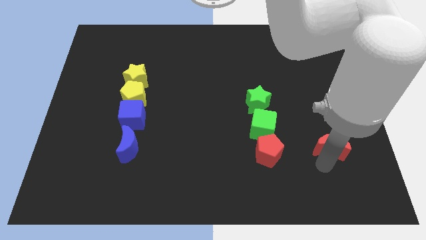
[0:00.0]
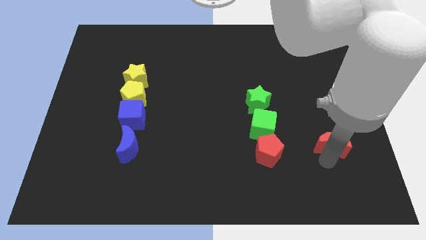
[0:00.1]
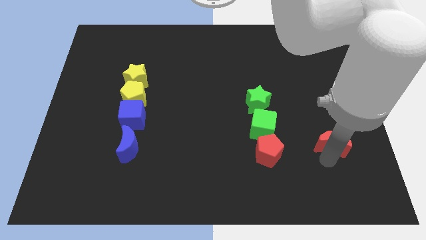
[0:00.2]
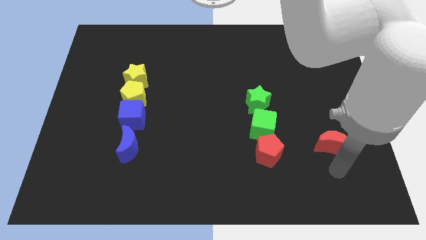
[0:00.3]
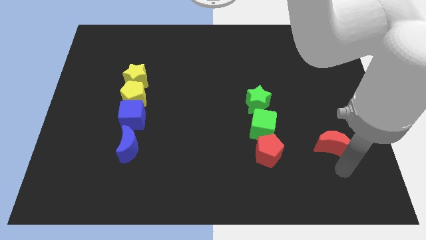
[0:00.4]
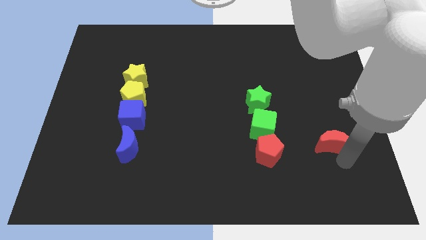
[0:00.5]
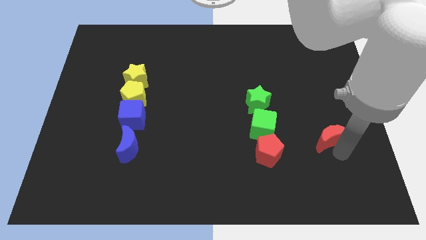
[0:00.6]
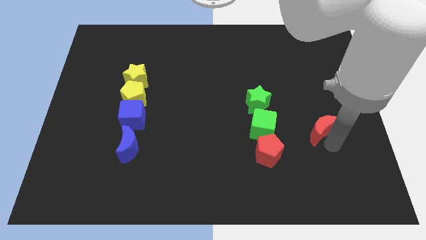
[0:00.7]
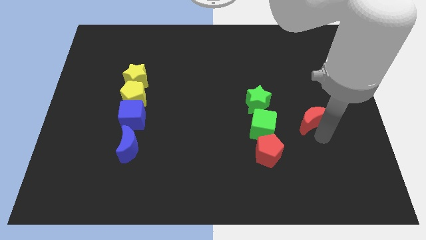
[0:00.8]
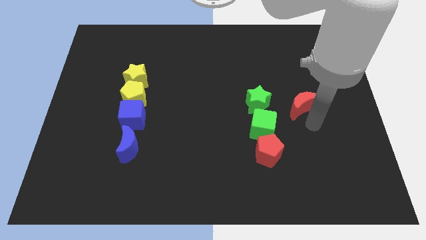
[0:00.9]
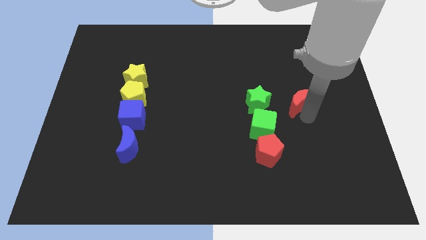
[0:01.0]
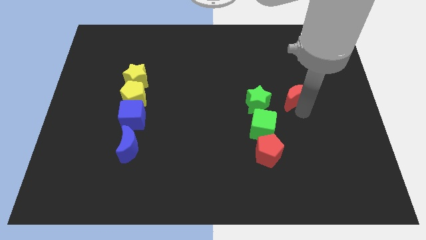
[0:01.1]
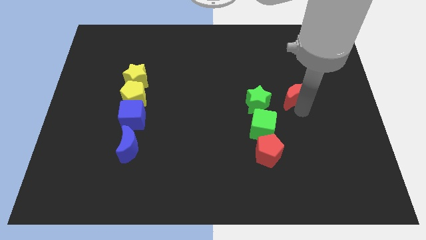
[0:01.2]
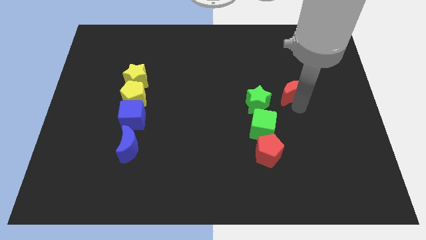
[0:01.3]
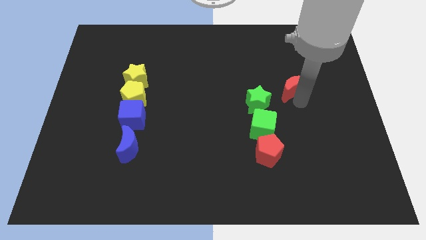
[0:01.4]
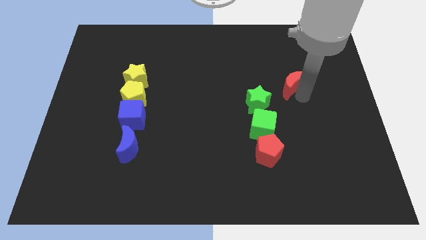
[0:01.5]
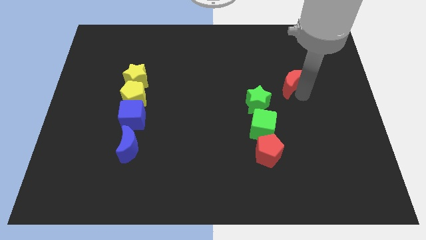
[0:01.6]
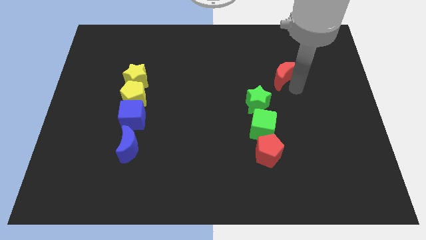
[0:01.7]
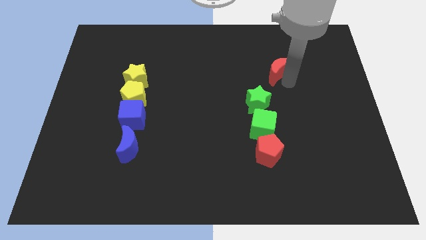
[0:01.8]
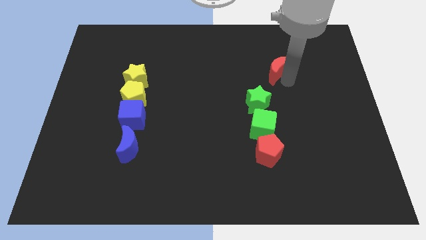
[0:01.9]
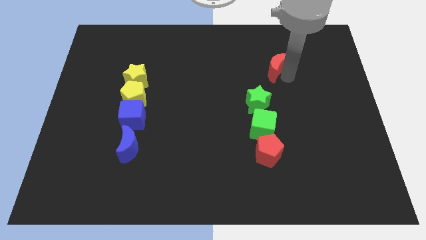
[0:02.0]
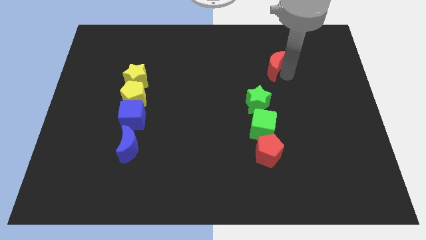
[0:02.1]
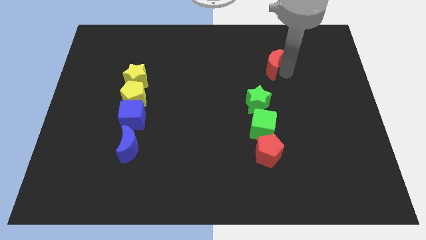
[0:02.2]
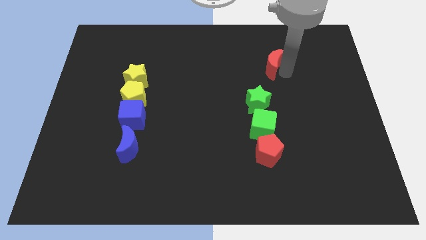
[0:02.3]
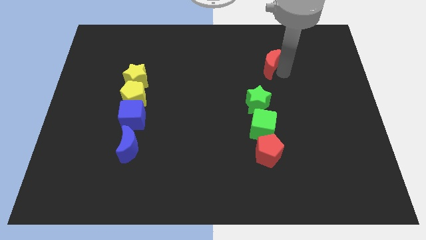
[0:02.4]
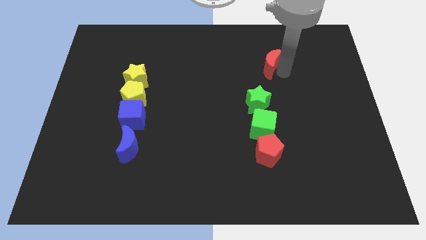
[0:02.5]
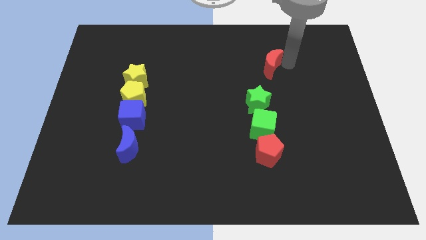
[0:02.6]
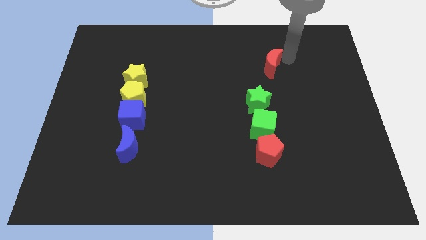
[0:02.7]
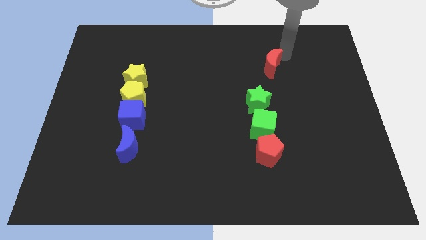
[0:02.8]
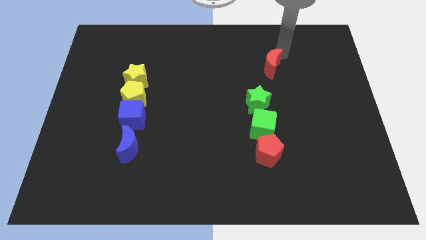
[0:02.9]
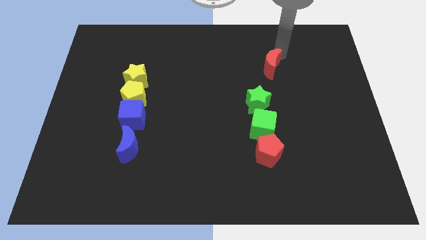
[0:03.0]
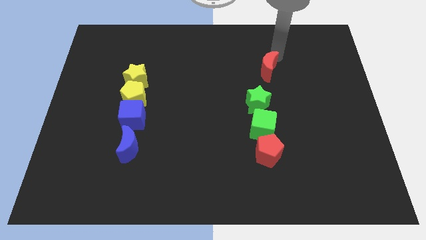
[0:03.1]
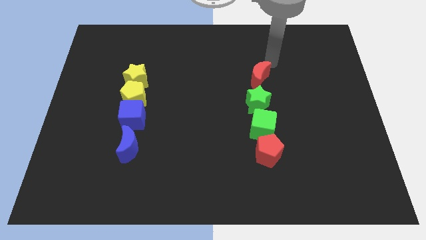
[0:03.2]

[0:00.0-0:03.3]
move red crescent diagonally to the right of the green star

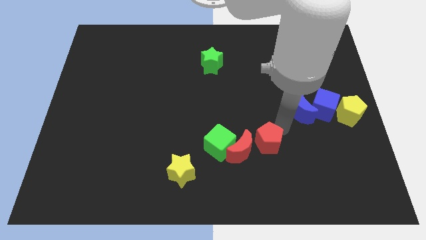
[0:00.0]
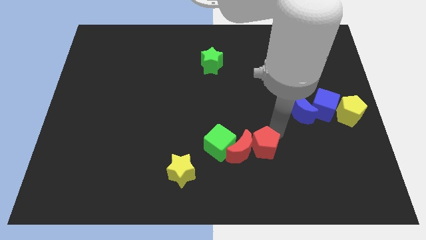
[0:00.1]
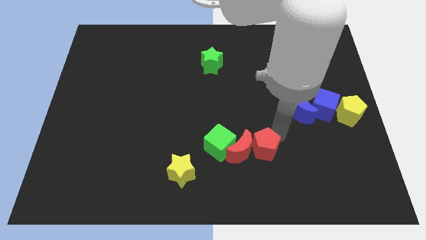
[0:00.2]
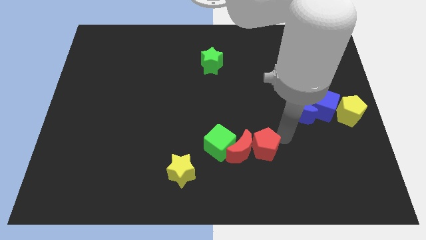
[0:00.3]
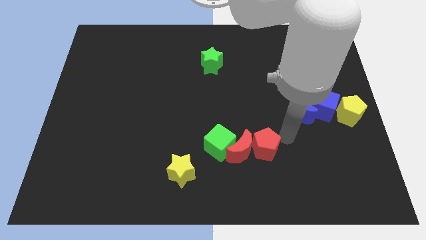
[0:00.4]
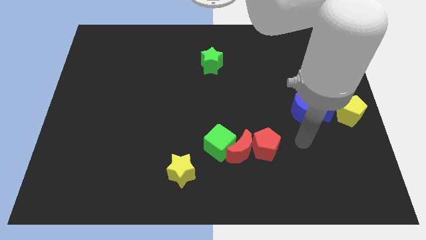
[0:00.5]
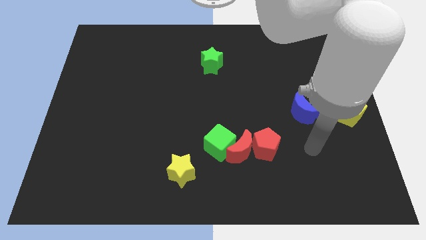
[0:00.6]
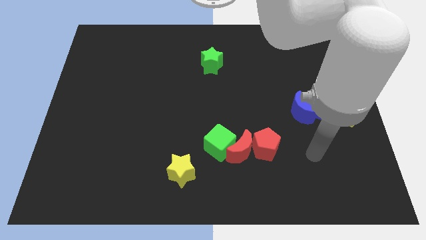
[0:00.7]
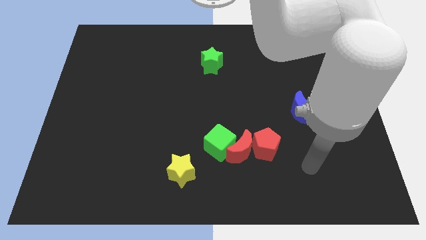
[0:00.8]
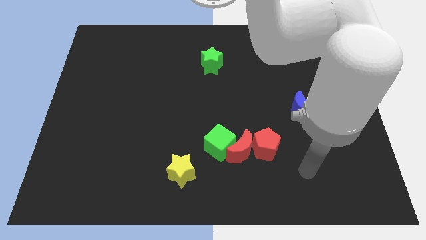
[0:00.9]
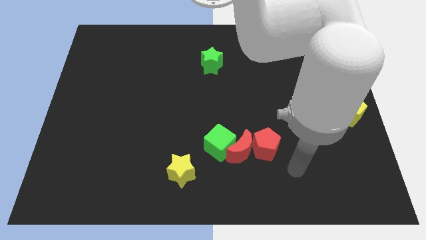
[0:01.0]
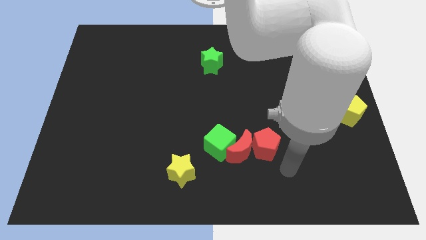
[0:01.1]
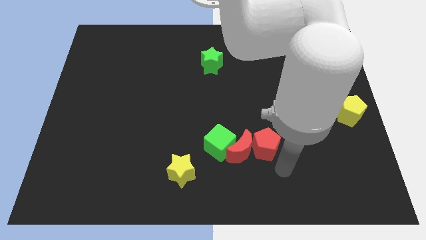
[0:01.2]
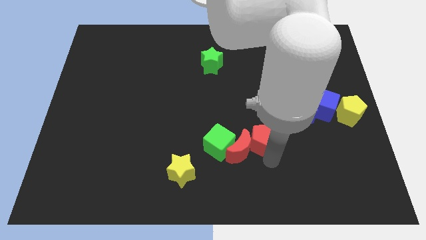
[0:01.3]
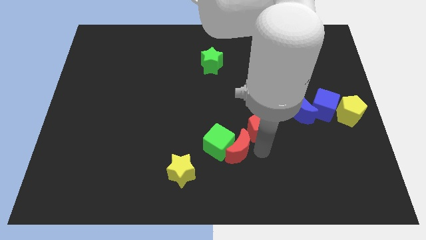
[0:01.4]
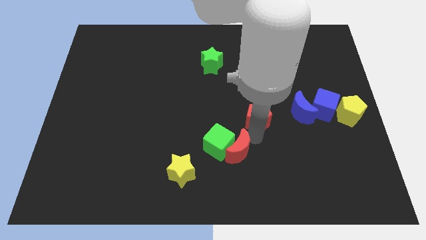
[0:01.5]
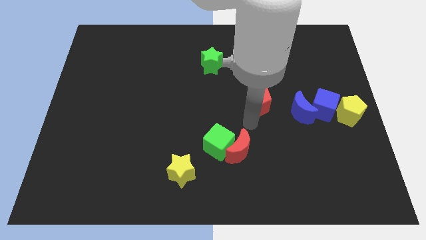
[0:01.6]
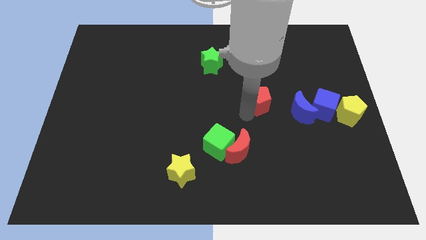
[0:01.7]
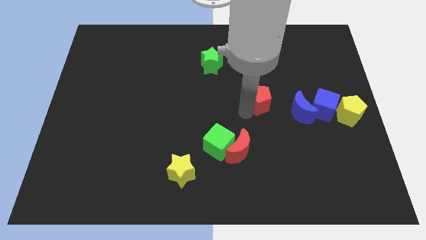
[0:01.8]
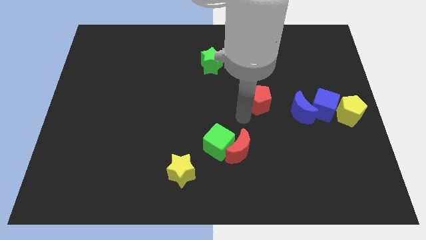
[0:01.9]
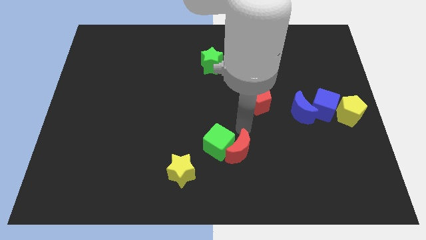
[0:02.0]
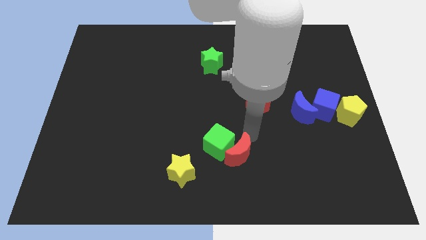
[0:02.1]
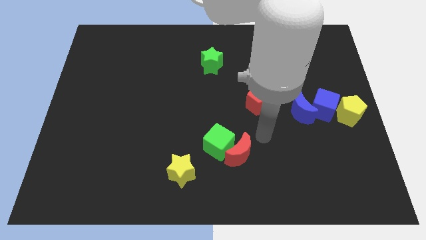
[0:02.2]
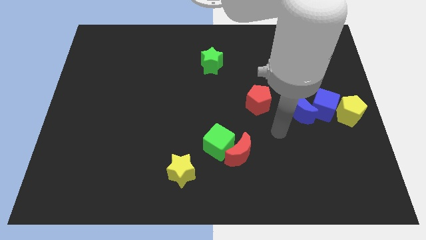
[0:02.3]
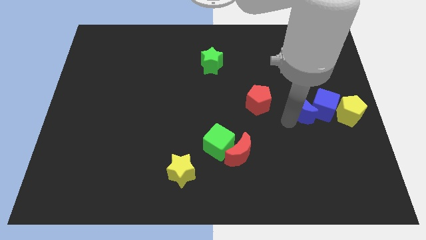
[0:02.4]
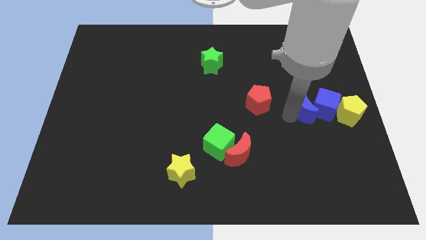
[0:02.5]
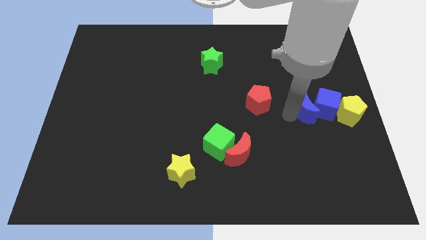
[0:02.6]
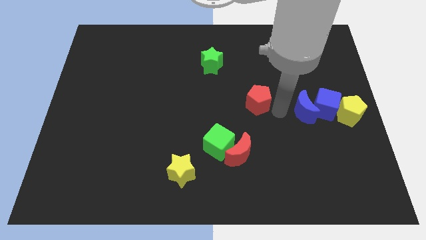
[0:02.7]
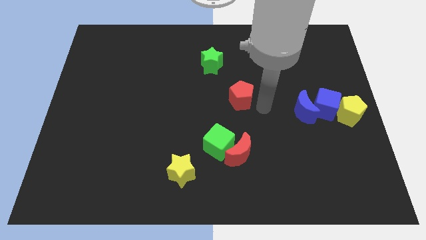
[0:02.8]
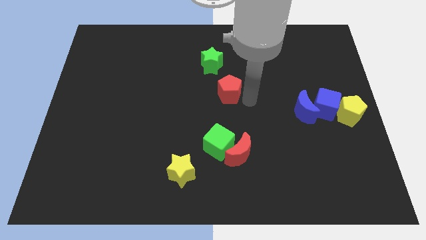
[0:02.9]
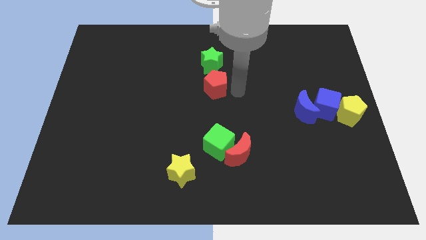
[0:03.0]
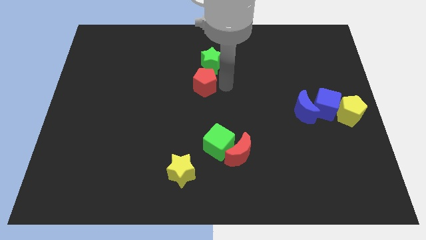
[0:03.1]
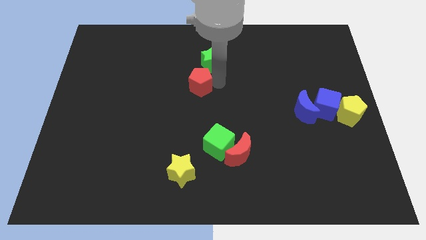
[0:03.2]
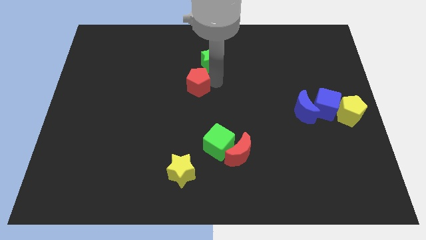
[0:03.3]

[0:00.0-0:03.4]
move the red pentagon towards the center of the board

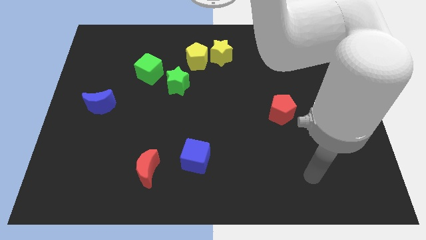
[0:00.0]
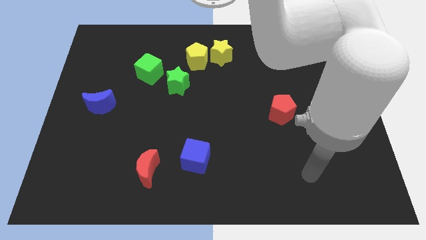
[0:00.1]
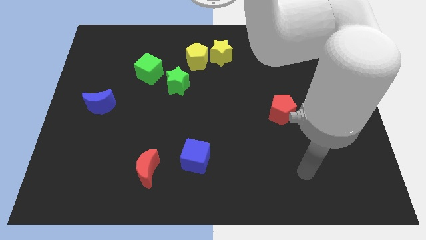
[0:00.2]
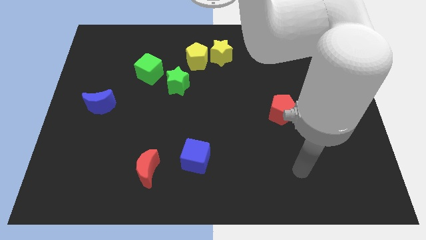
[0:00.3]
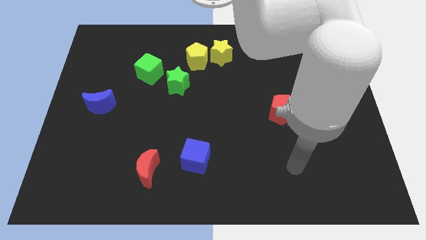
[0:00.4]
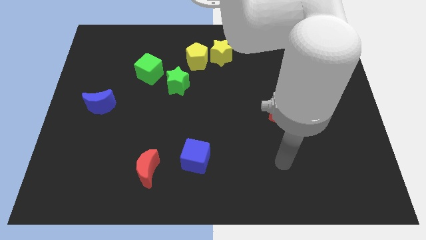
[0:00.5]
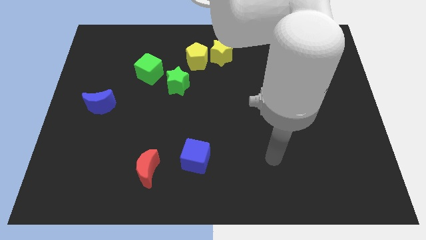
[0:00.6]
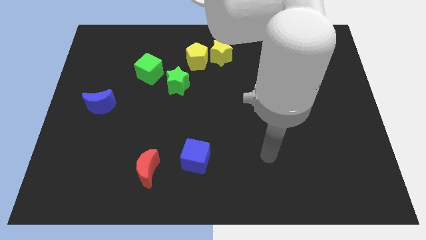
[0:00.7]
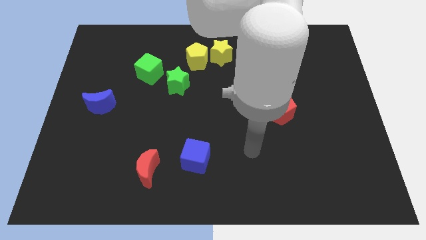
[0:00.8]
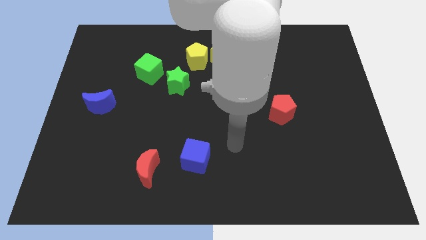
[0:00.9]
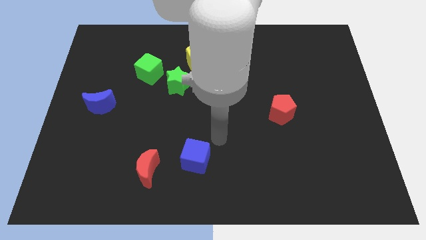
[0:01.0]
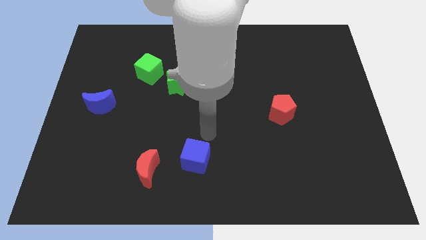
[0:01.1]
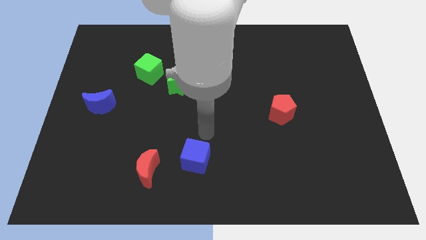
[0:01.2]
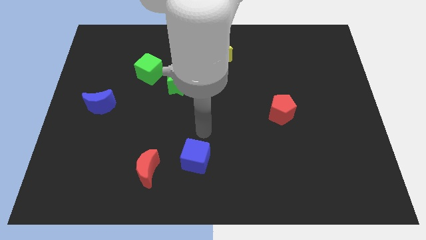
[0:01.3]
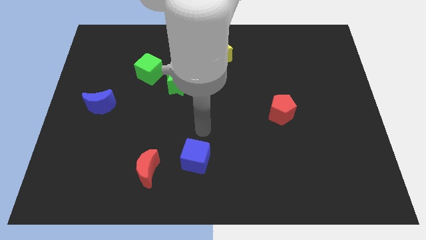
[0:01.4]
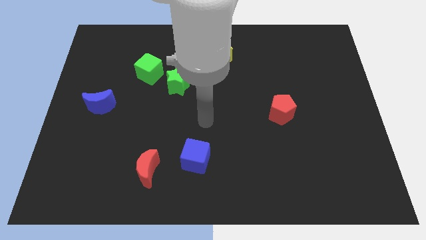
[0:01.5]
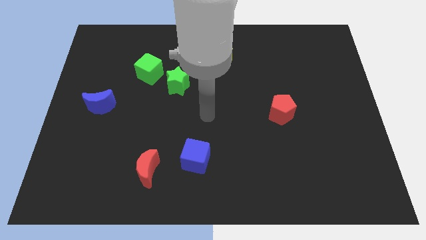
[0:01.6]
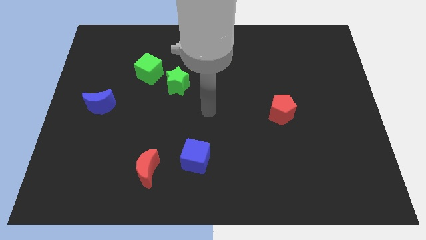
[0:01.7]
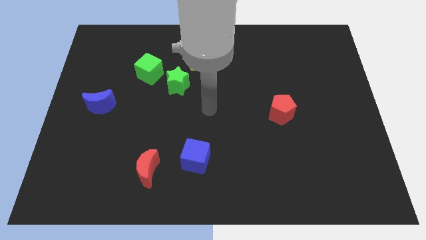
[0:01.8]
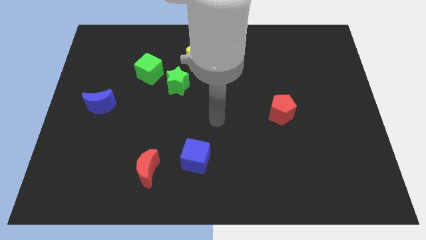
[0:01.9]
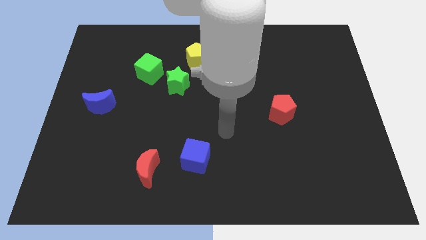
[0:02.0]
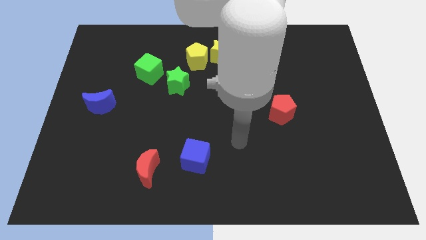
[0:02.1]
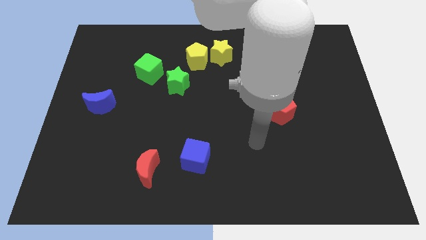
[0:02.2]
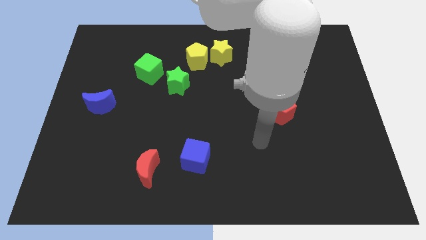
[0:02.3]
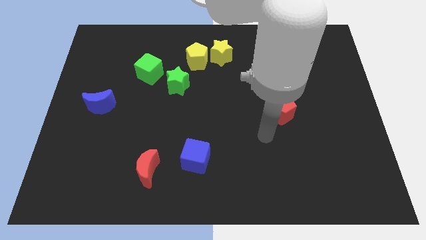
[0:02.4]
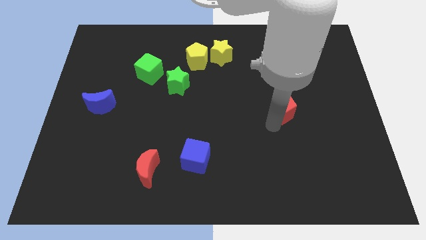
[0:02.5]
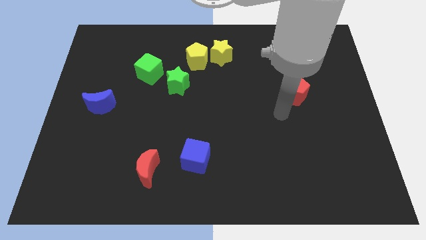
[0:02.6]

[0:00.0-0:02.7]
tap the red pentagon
